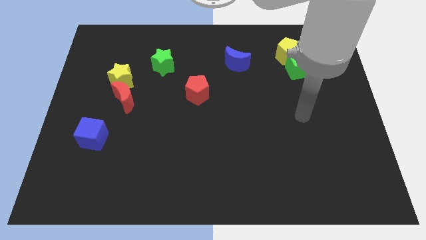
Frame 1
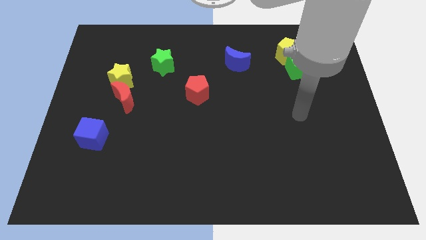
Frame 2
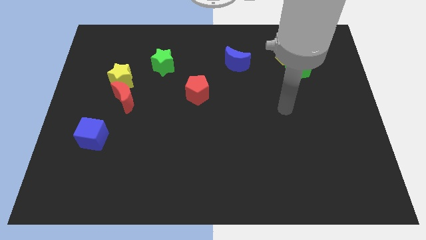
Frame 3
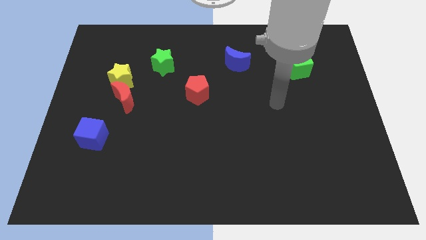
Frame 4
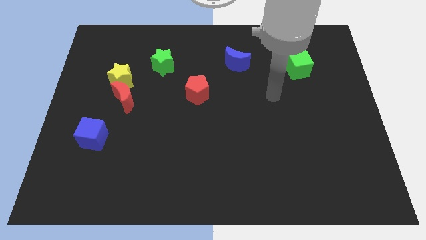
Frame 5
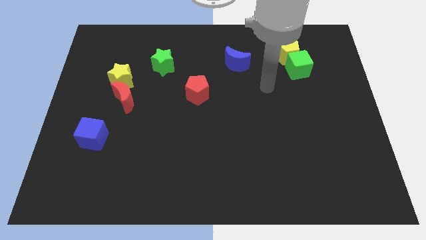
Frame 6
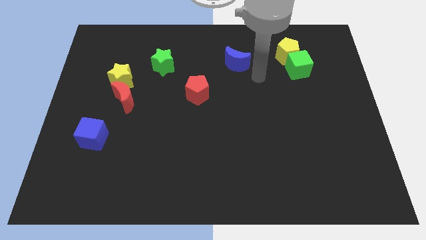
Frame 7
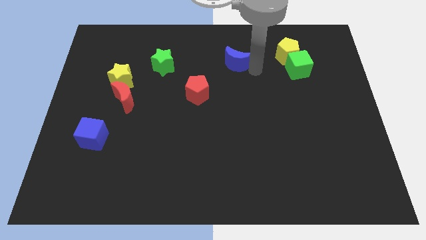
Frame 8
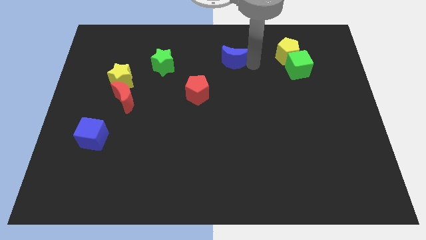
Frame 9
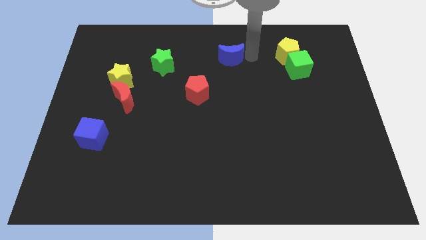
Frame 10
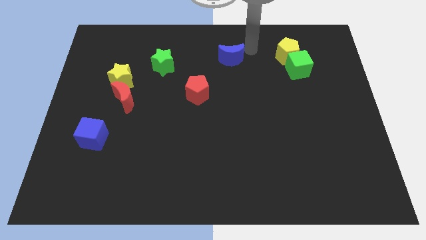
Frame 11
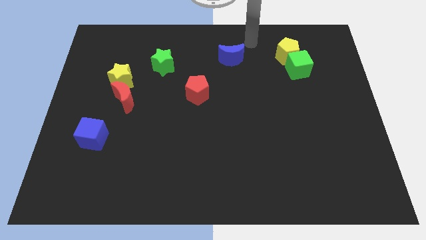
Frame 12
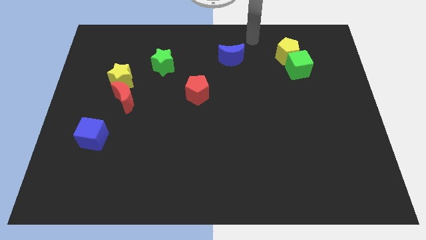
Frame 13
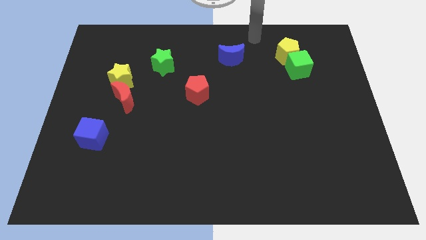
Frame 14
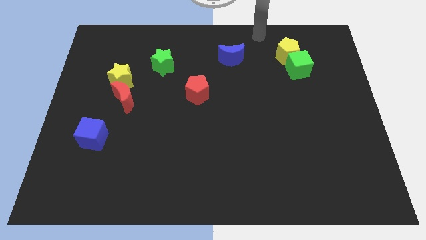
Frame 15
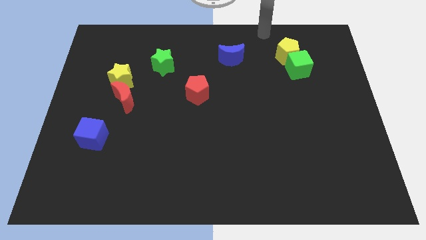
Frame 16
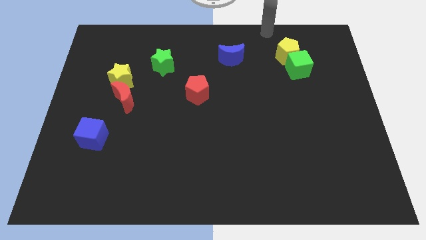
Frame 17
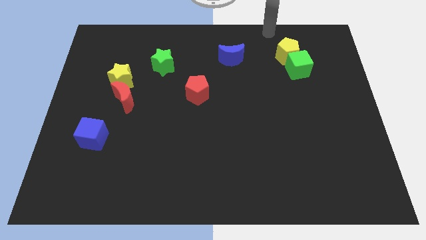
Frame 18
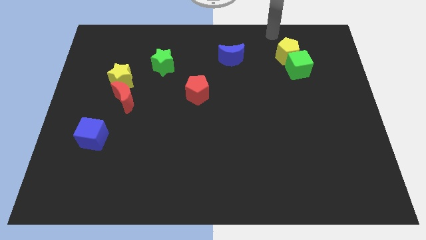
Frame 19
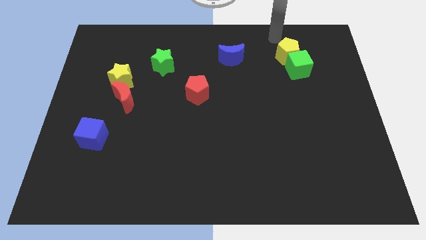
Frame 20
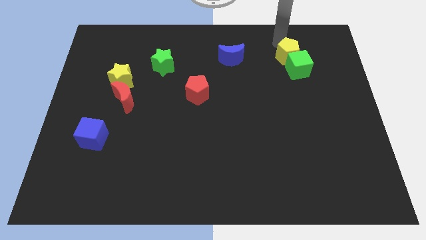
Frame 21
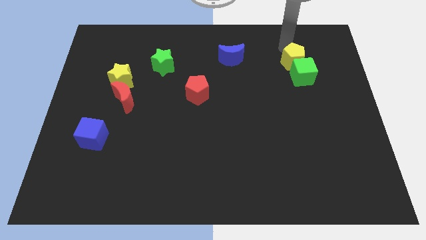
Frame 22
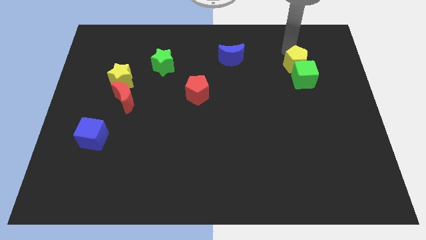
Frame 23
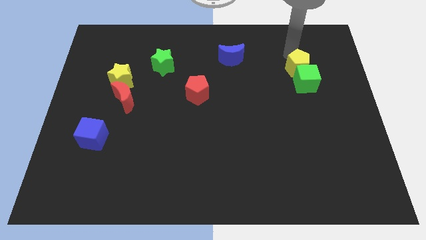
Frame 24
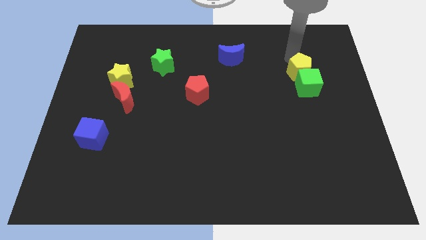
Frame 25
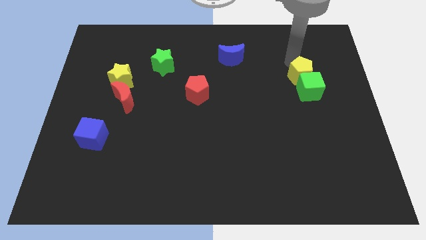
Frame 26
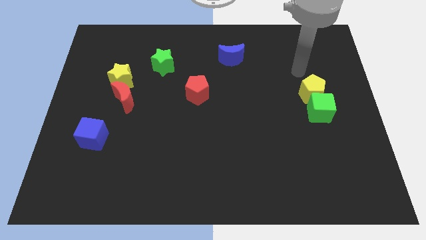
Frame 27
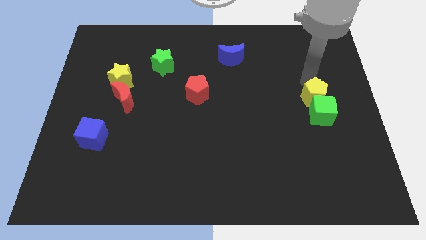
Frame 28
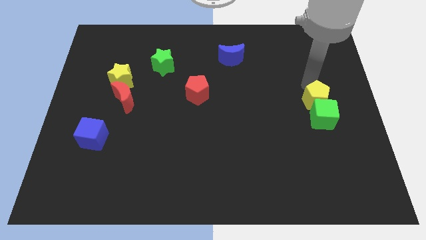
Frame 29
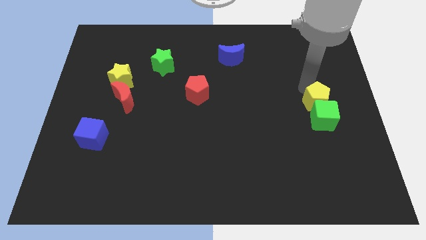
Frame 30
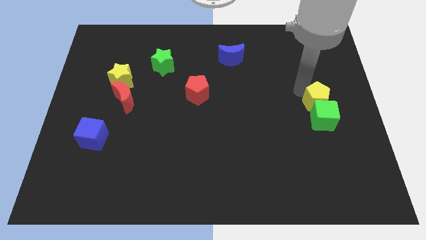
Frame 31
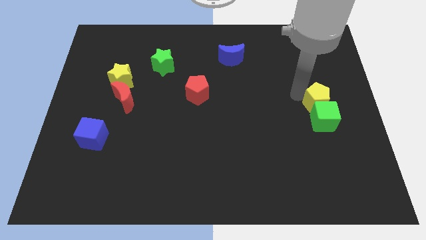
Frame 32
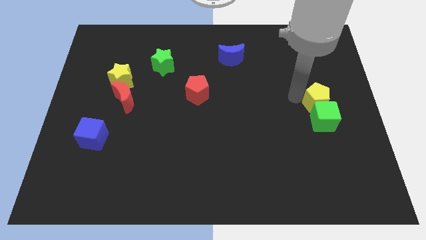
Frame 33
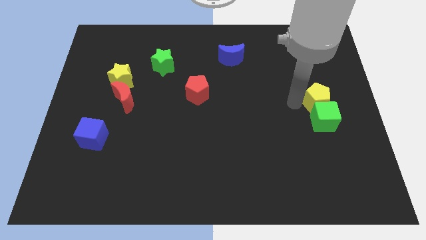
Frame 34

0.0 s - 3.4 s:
push the yellow pentagon into the green cube

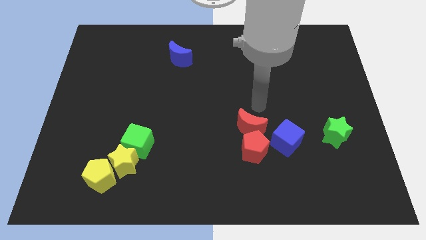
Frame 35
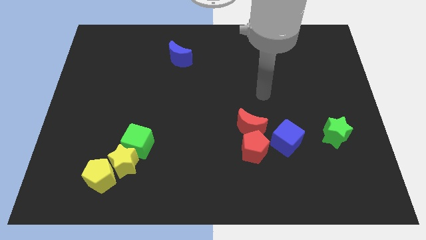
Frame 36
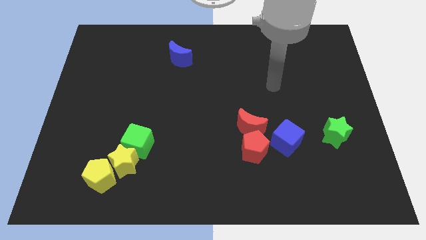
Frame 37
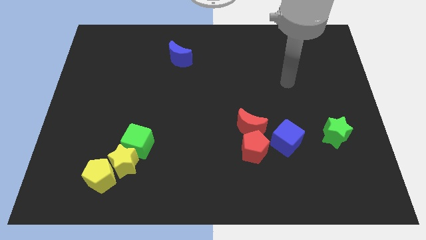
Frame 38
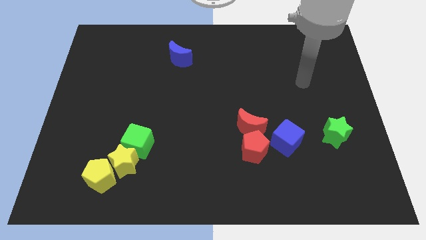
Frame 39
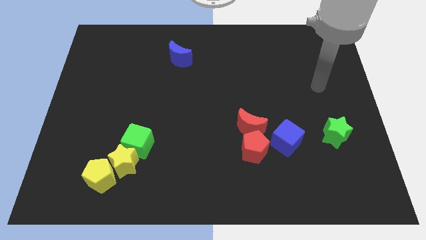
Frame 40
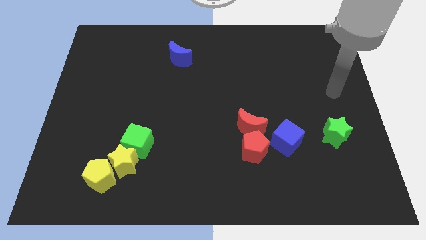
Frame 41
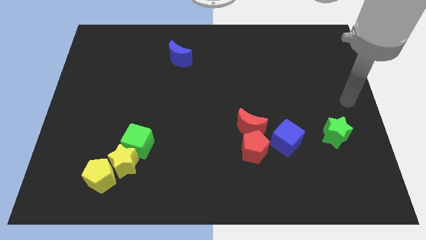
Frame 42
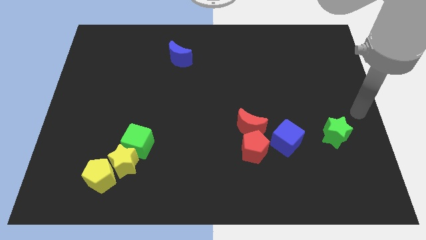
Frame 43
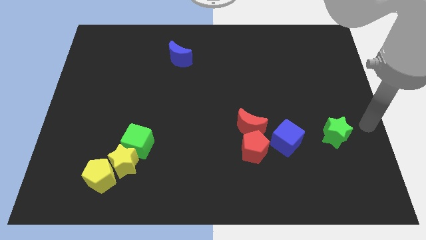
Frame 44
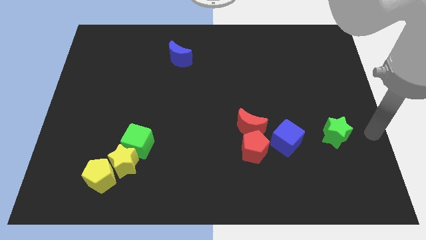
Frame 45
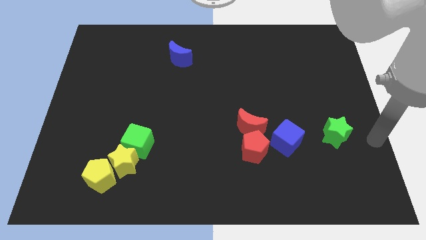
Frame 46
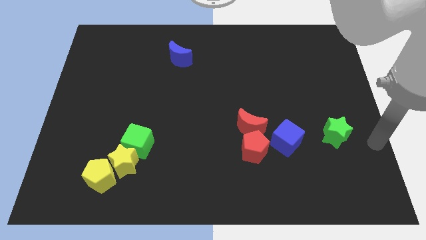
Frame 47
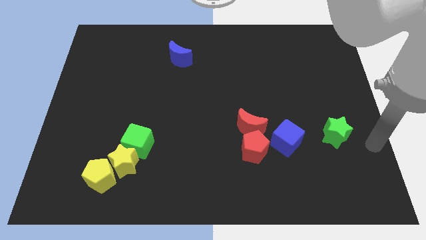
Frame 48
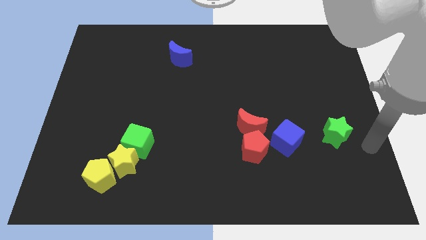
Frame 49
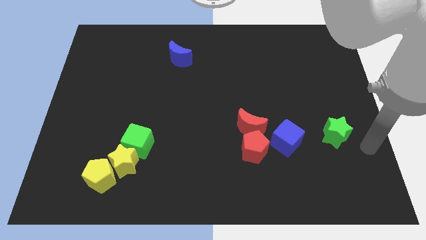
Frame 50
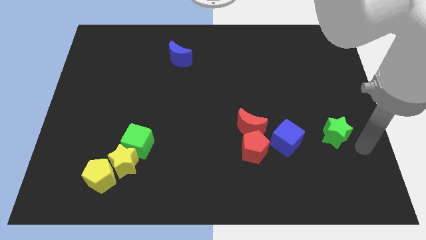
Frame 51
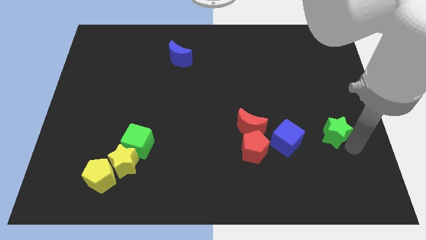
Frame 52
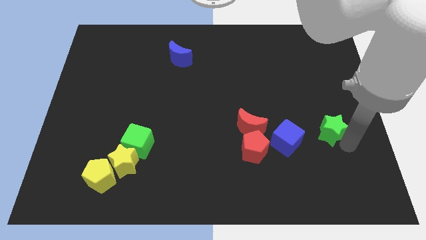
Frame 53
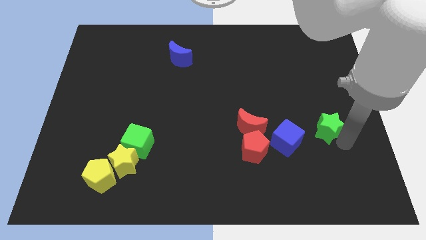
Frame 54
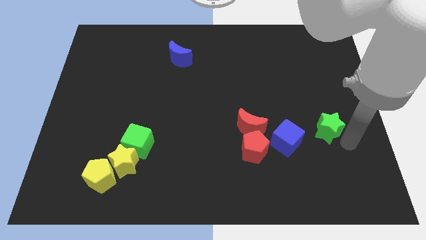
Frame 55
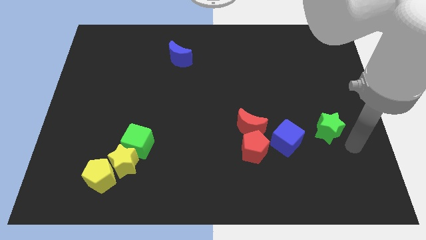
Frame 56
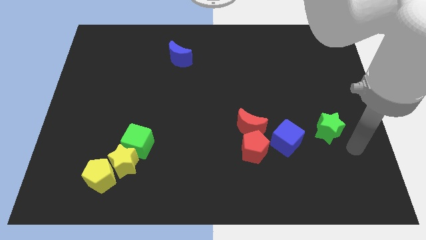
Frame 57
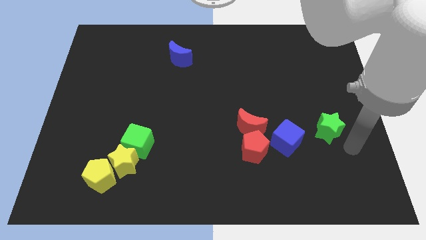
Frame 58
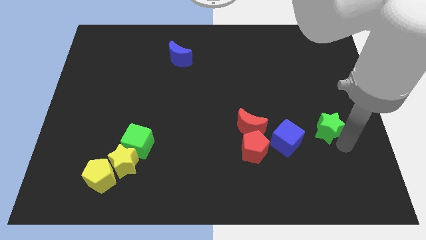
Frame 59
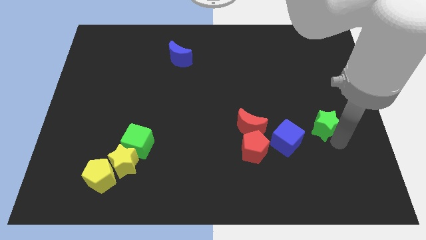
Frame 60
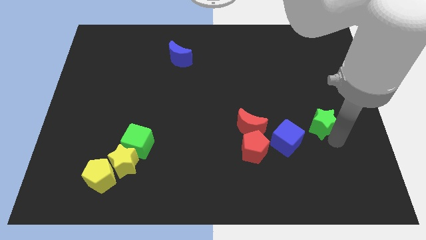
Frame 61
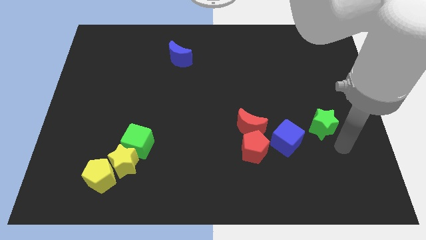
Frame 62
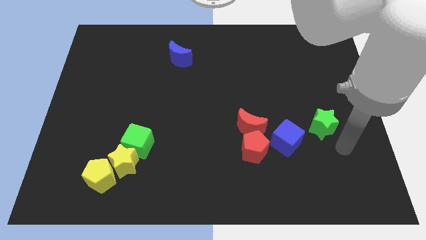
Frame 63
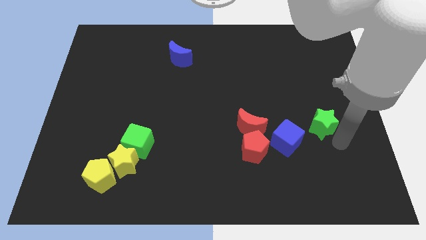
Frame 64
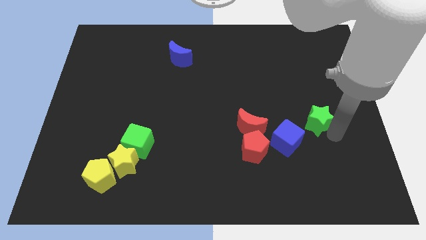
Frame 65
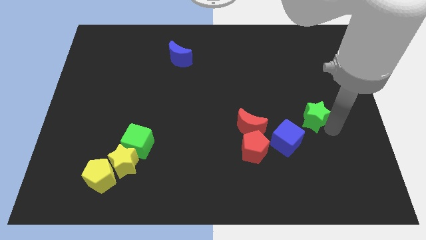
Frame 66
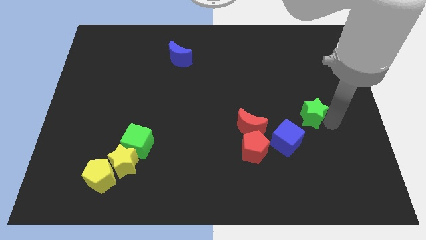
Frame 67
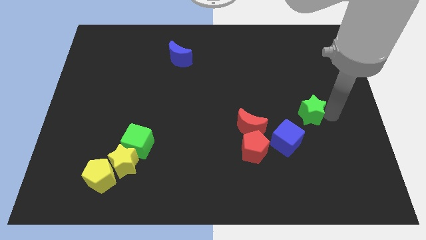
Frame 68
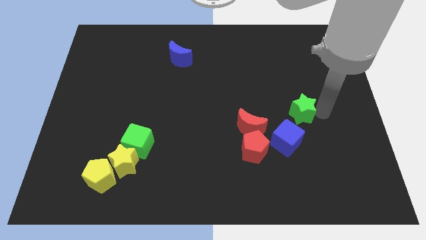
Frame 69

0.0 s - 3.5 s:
push the green star to the top right of the blue cube

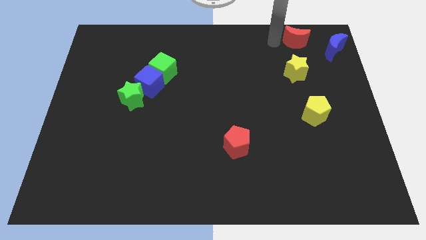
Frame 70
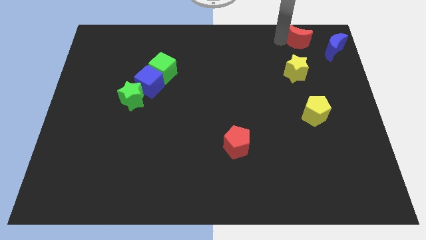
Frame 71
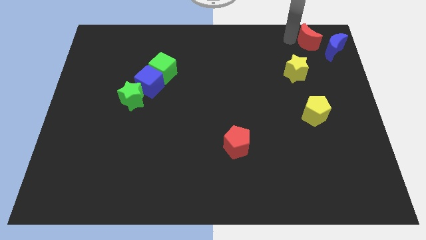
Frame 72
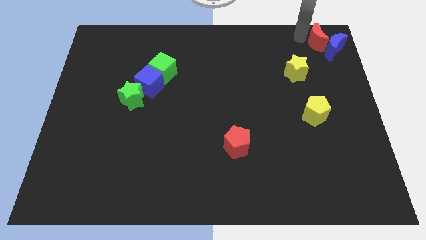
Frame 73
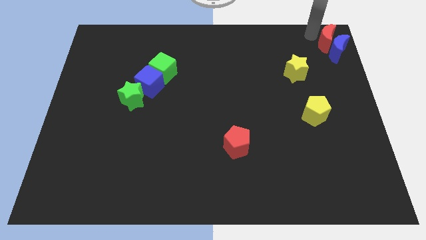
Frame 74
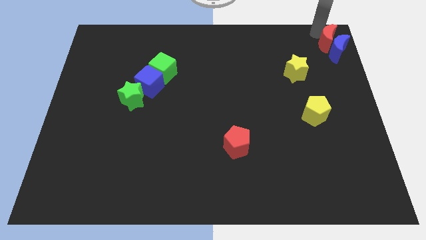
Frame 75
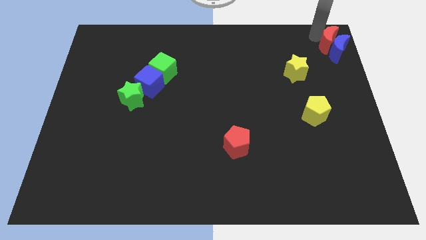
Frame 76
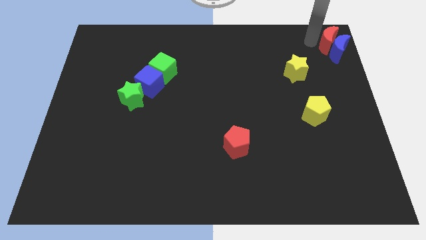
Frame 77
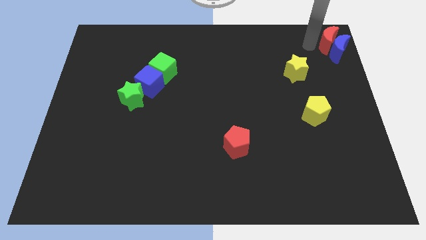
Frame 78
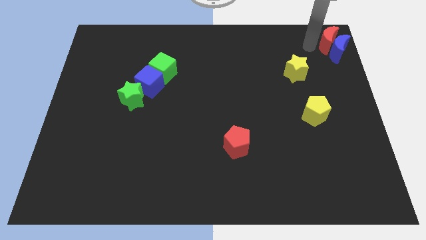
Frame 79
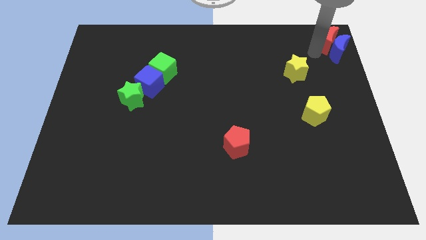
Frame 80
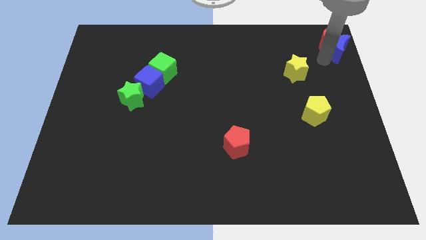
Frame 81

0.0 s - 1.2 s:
place the red crescent beside the blue crescent

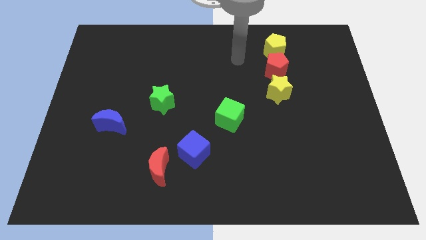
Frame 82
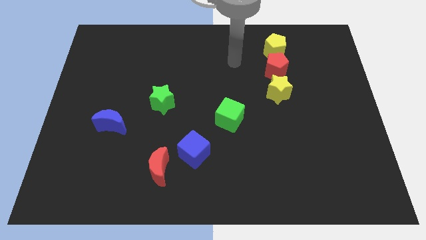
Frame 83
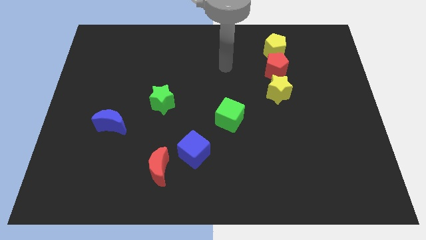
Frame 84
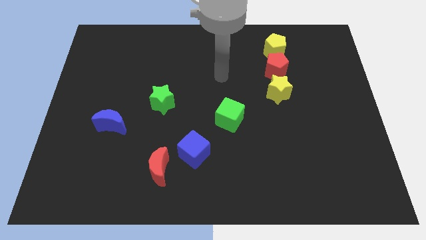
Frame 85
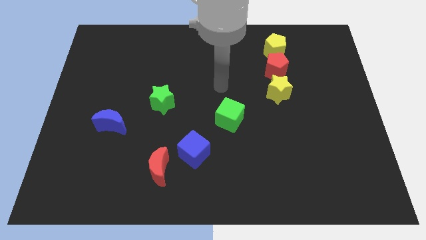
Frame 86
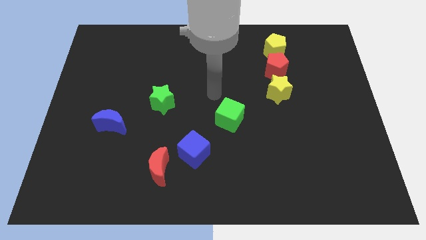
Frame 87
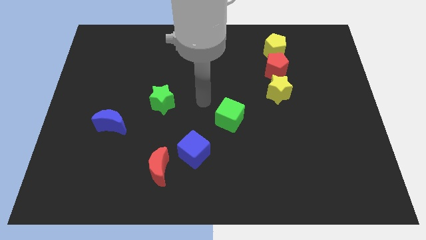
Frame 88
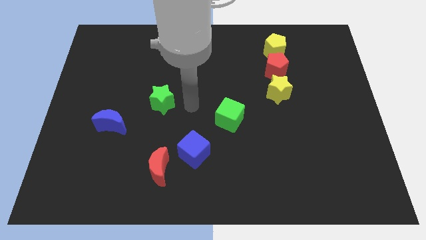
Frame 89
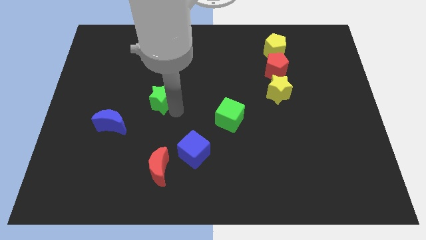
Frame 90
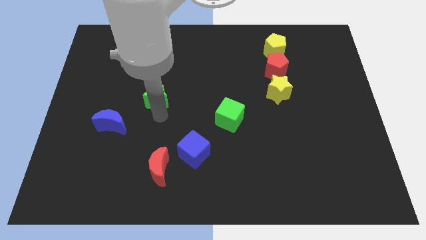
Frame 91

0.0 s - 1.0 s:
place the arm in between the green star and blue cube
